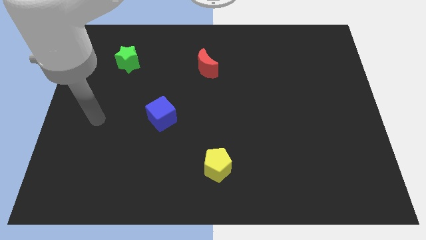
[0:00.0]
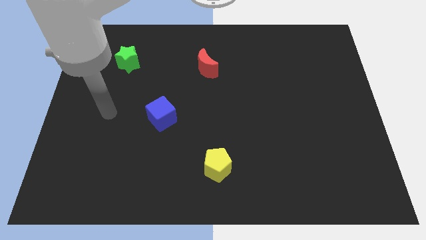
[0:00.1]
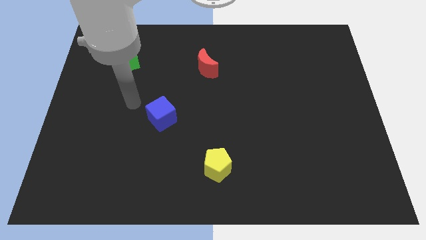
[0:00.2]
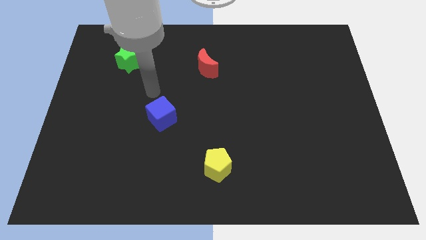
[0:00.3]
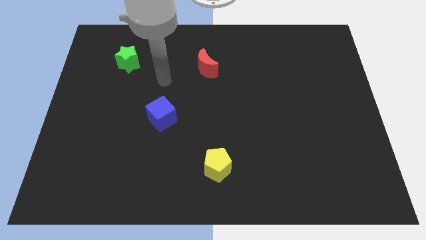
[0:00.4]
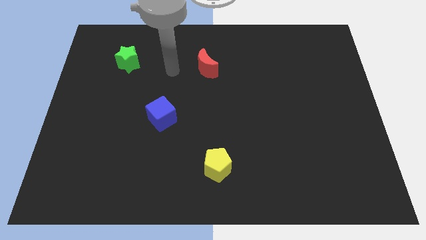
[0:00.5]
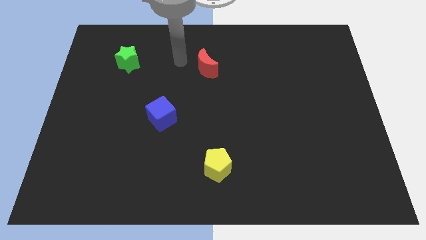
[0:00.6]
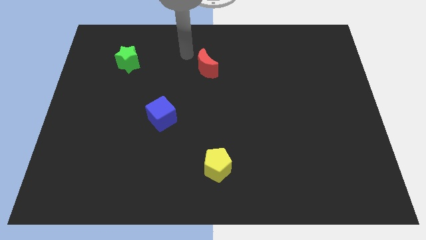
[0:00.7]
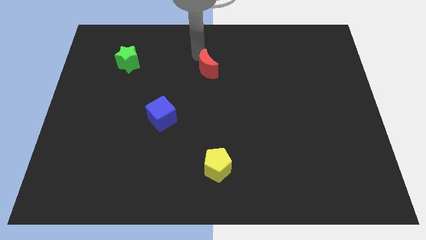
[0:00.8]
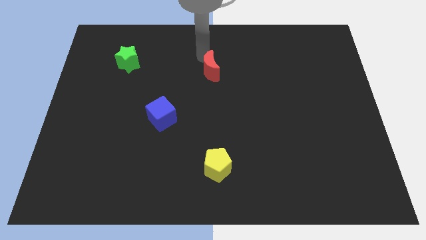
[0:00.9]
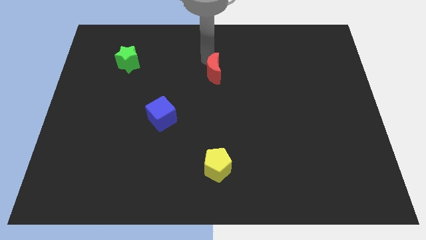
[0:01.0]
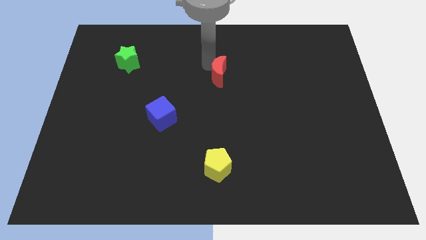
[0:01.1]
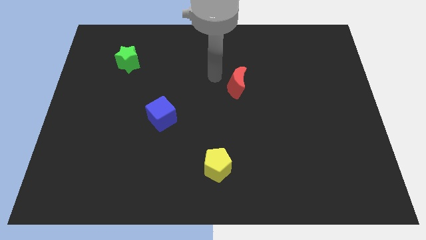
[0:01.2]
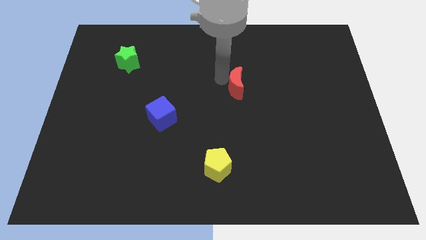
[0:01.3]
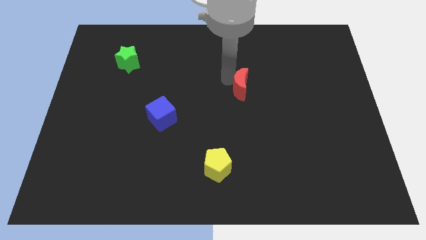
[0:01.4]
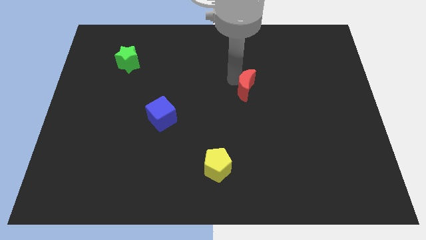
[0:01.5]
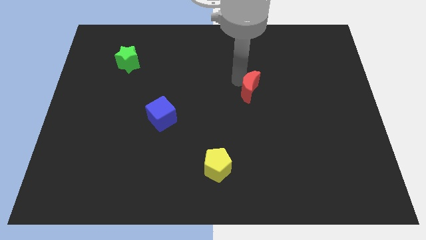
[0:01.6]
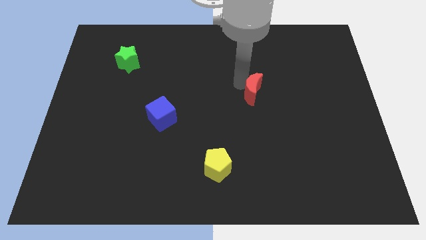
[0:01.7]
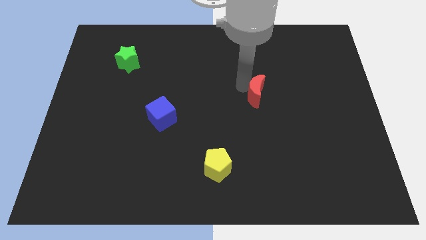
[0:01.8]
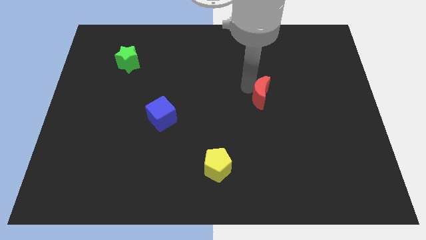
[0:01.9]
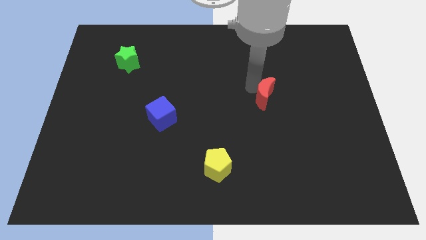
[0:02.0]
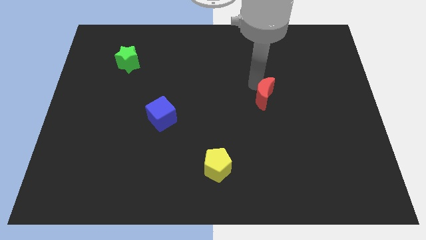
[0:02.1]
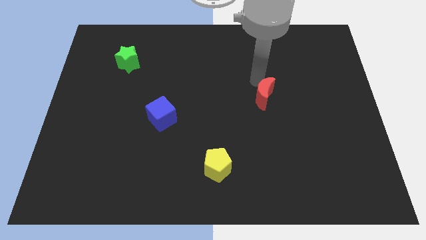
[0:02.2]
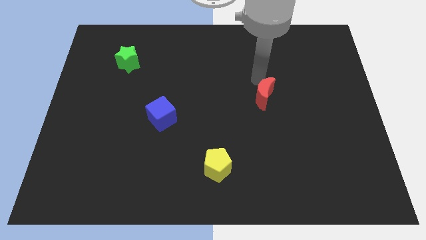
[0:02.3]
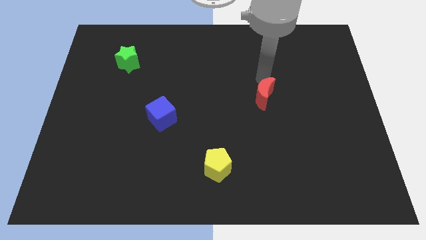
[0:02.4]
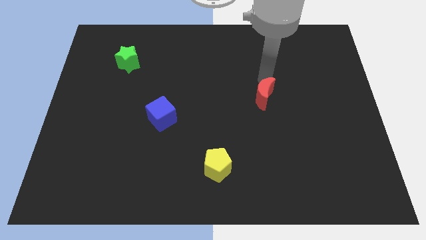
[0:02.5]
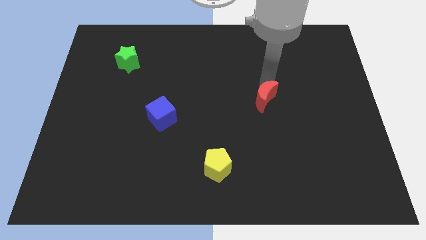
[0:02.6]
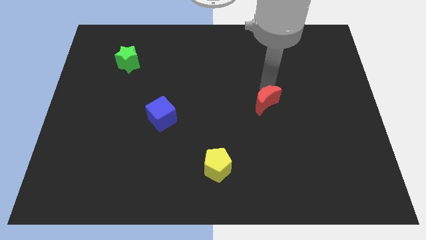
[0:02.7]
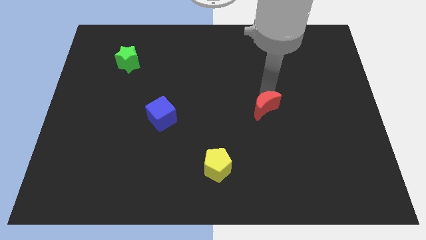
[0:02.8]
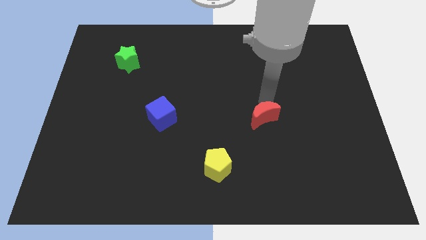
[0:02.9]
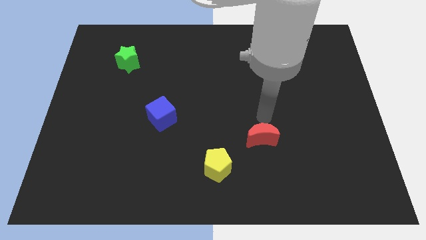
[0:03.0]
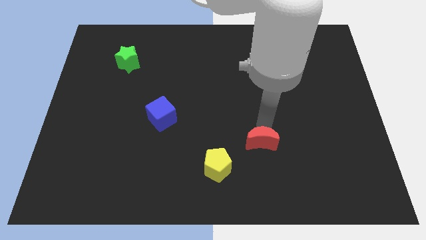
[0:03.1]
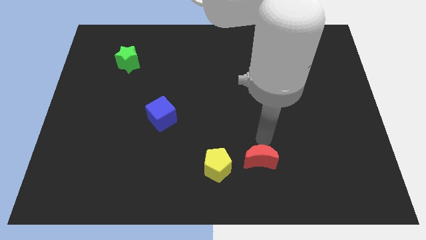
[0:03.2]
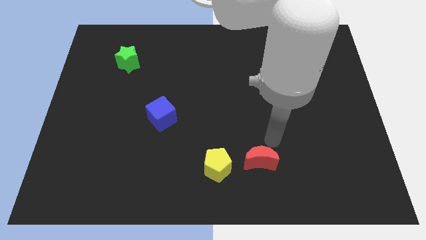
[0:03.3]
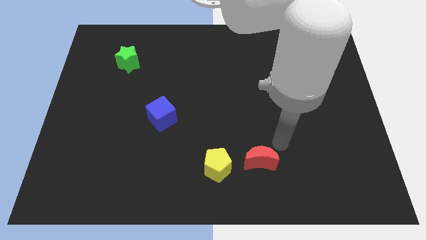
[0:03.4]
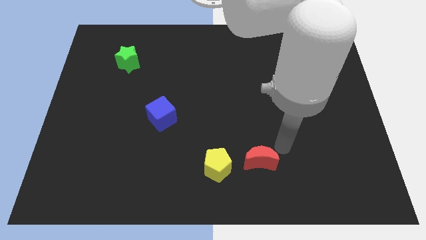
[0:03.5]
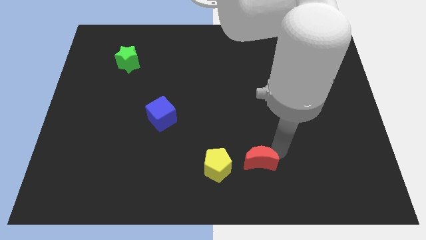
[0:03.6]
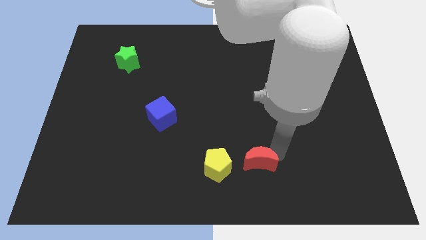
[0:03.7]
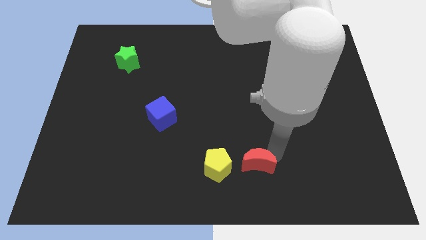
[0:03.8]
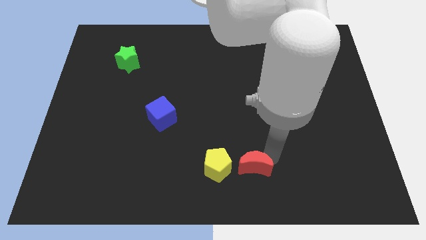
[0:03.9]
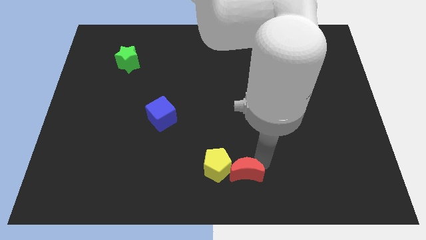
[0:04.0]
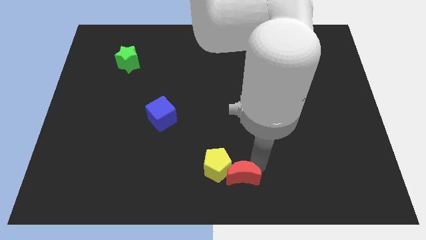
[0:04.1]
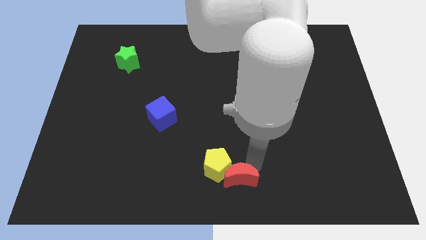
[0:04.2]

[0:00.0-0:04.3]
slide the red block to the pentagon

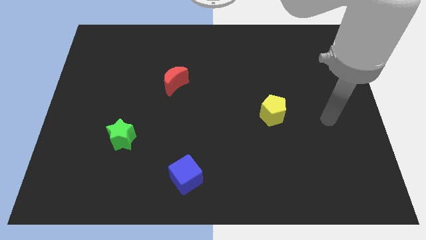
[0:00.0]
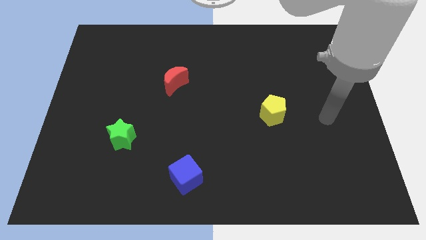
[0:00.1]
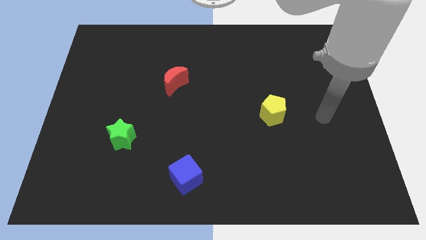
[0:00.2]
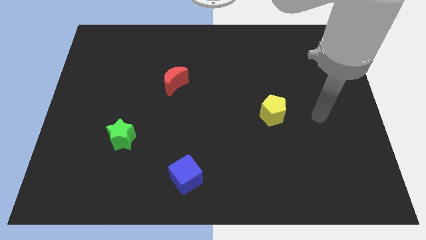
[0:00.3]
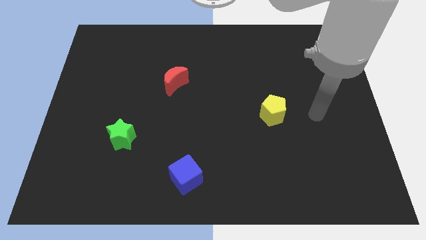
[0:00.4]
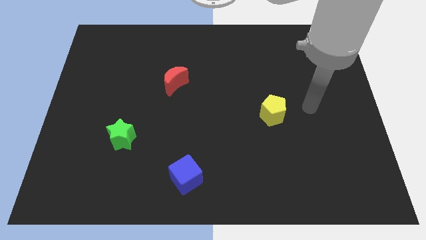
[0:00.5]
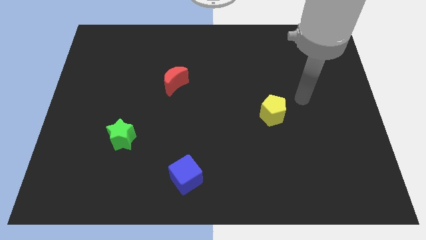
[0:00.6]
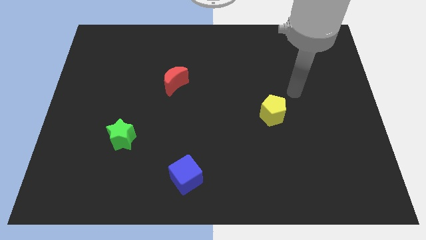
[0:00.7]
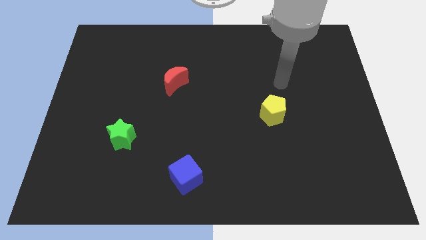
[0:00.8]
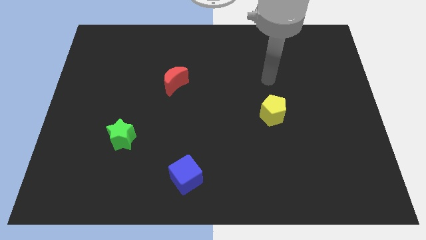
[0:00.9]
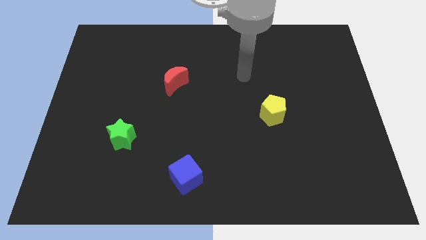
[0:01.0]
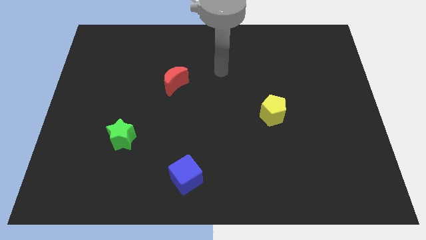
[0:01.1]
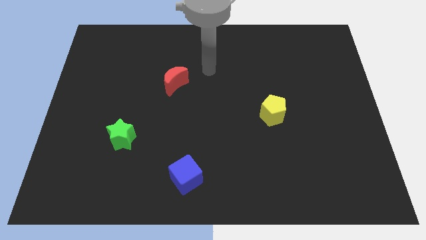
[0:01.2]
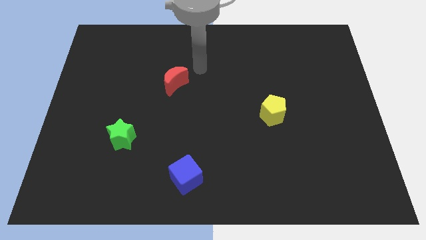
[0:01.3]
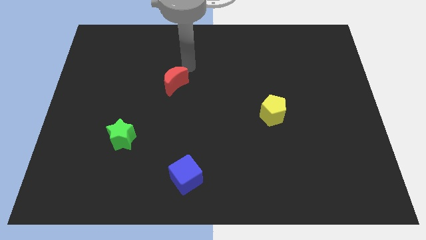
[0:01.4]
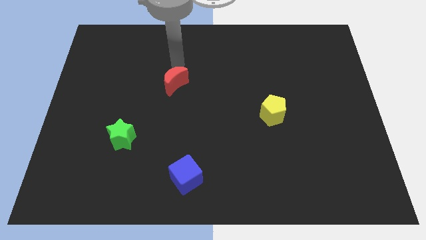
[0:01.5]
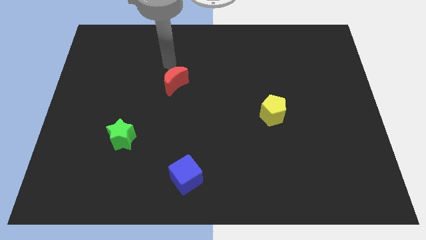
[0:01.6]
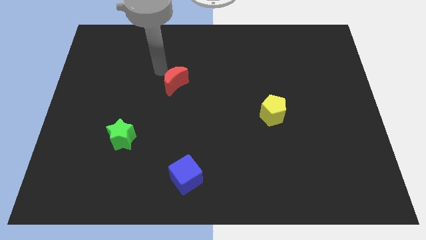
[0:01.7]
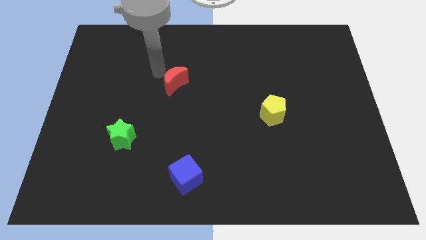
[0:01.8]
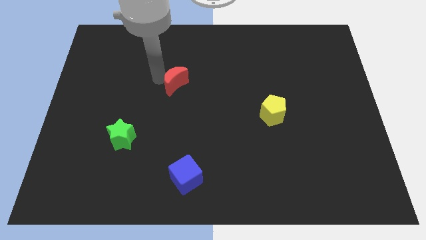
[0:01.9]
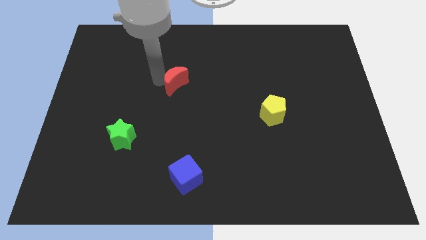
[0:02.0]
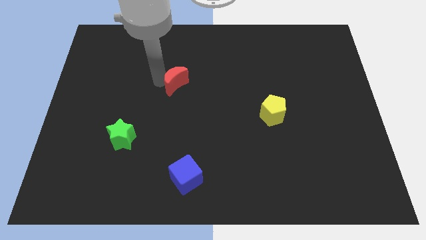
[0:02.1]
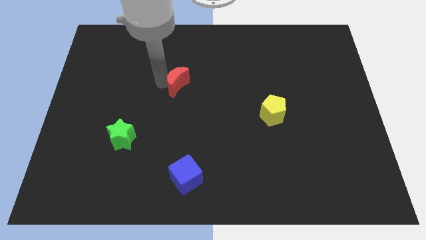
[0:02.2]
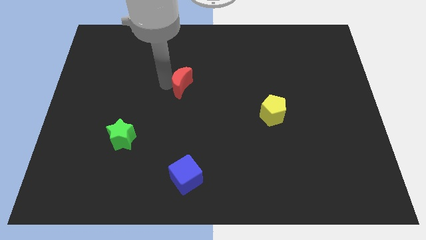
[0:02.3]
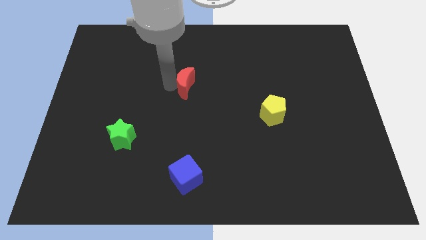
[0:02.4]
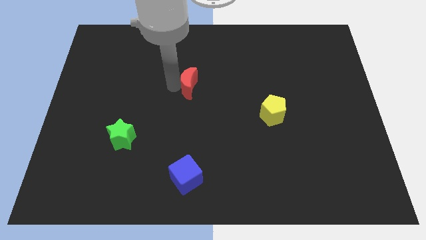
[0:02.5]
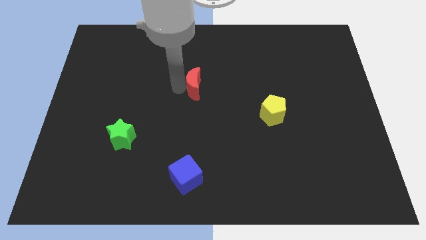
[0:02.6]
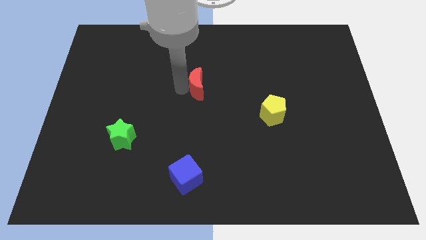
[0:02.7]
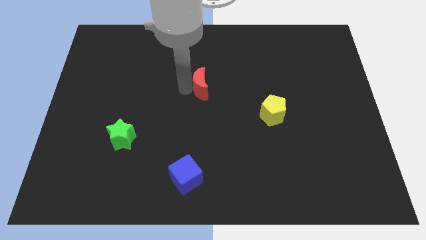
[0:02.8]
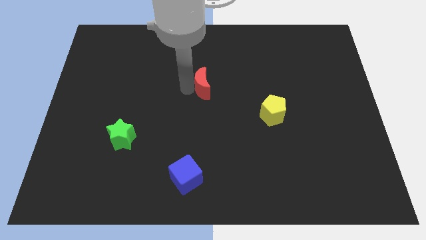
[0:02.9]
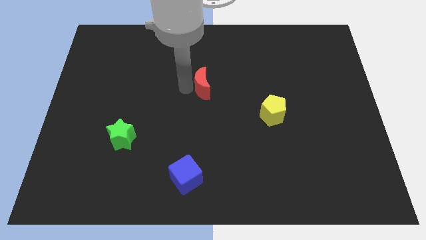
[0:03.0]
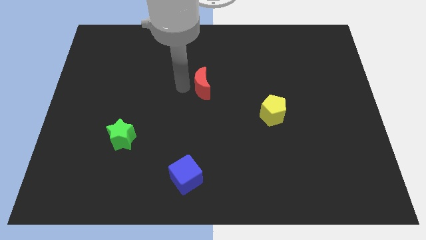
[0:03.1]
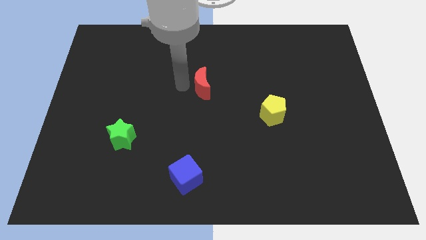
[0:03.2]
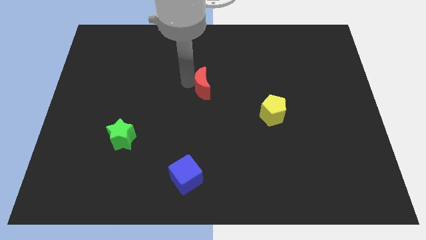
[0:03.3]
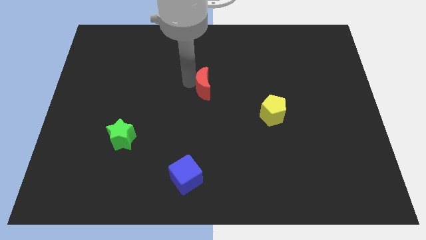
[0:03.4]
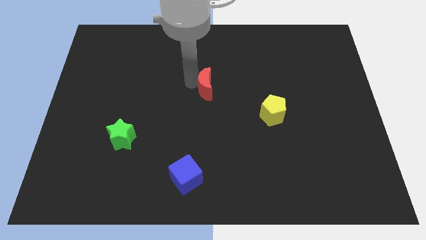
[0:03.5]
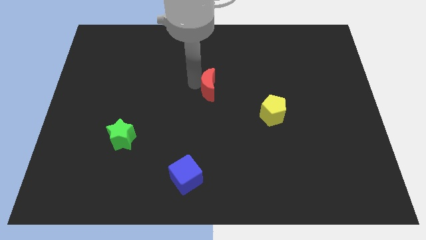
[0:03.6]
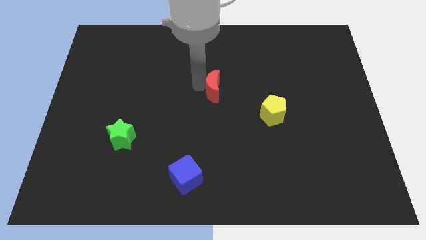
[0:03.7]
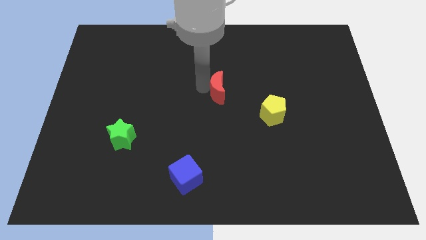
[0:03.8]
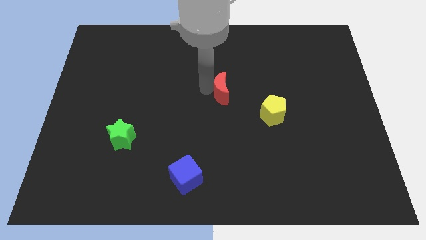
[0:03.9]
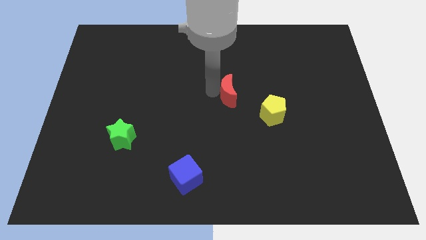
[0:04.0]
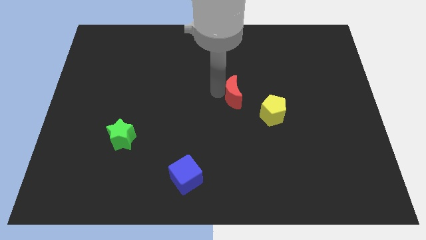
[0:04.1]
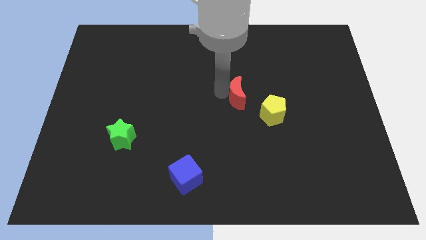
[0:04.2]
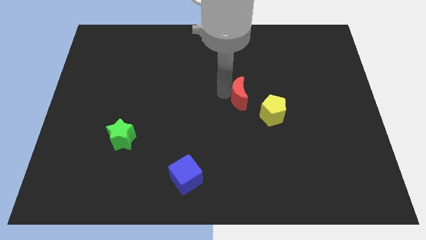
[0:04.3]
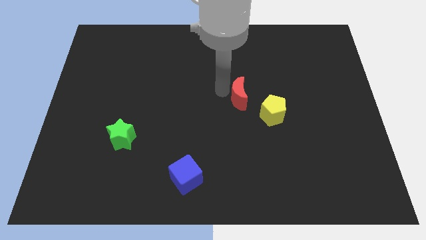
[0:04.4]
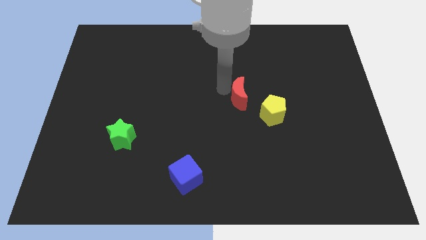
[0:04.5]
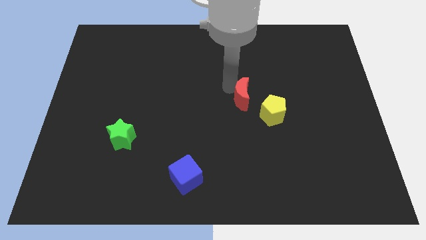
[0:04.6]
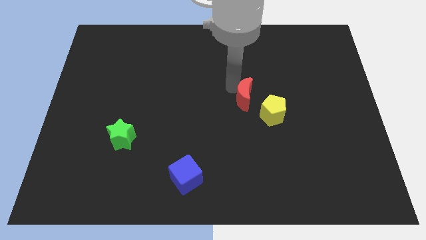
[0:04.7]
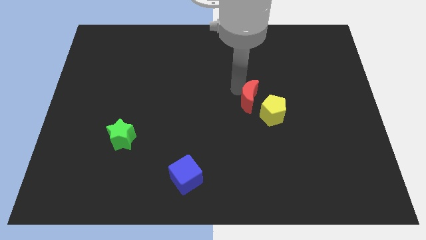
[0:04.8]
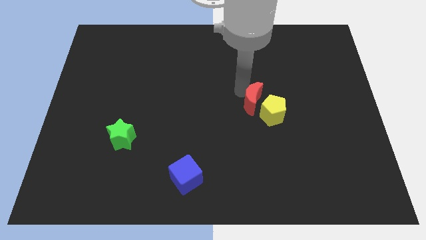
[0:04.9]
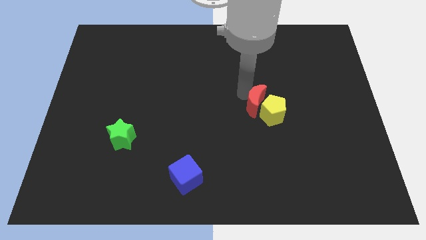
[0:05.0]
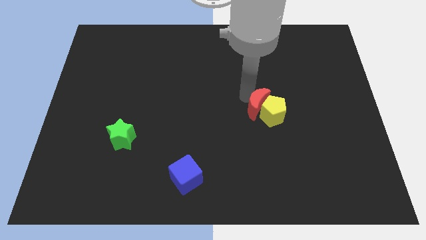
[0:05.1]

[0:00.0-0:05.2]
slide the red block towards the yellow pentagon
